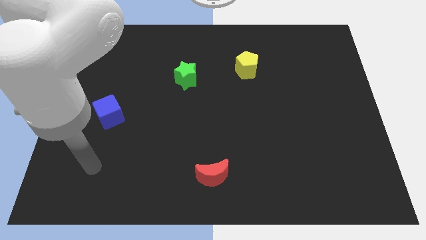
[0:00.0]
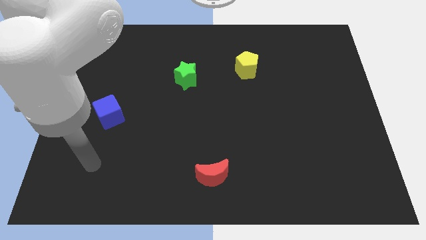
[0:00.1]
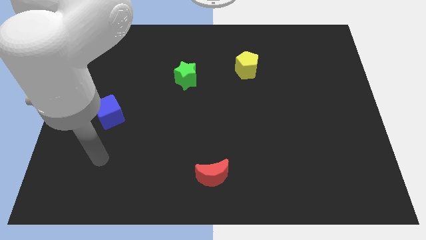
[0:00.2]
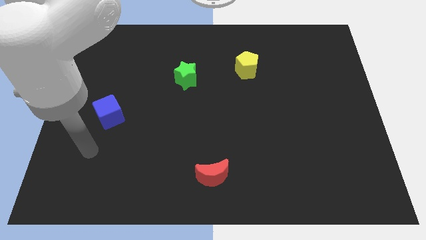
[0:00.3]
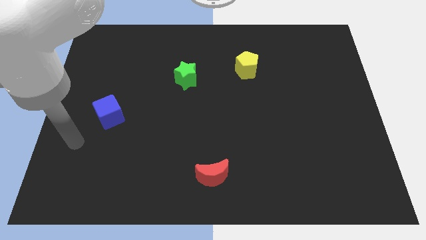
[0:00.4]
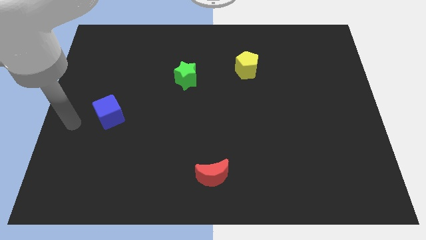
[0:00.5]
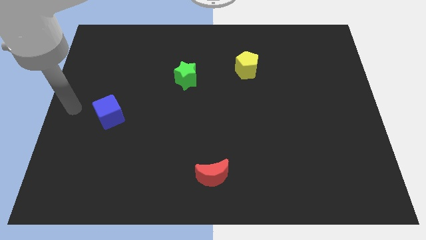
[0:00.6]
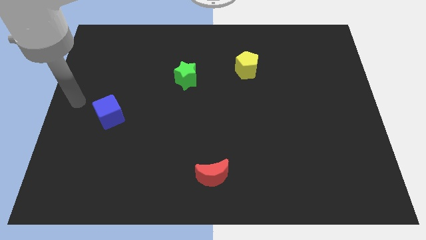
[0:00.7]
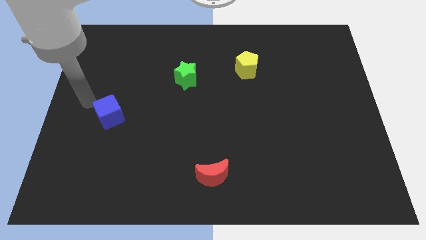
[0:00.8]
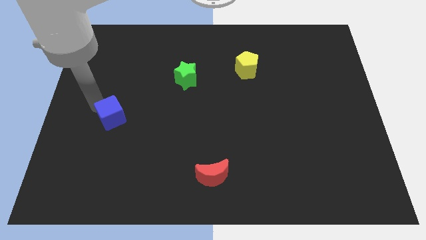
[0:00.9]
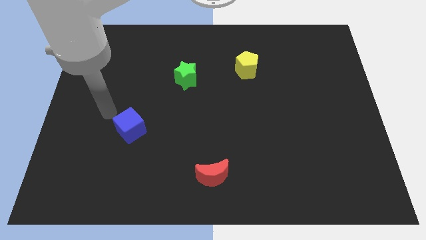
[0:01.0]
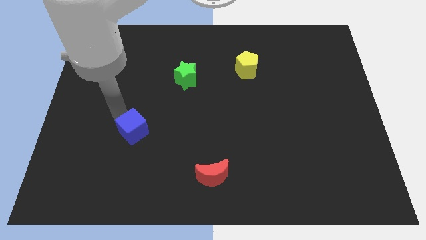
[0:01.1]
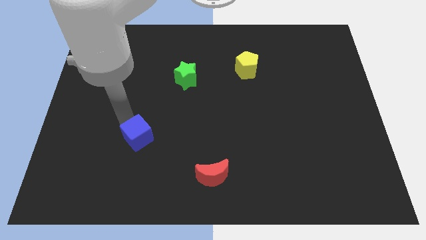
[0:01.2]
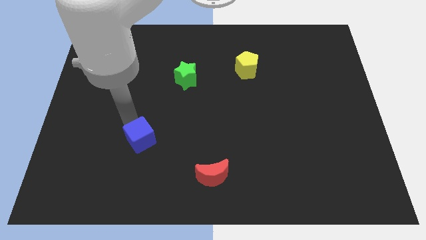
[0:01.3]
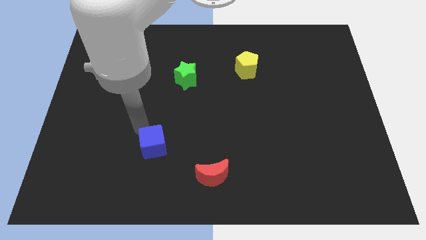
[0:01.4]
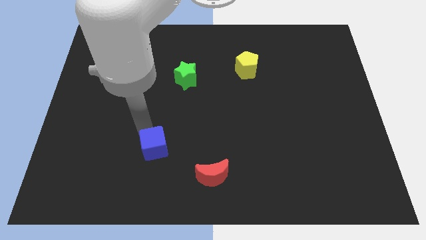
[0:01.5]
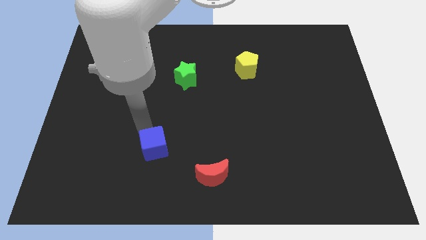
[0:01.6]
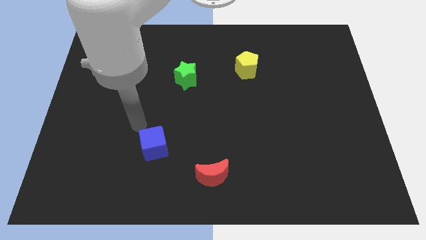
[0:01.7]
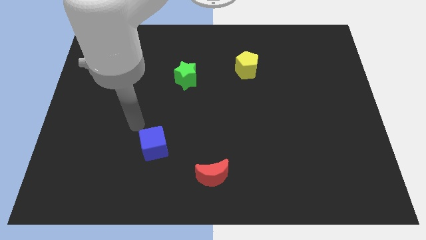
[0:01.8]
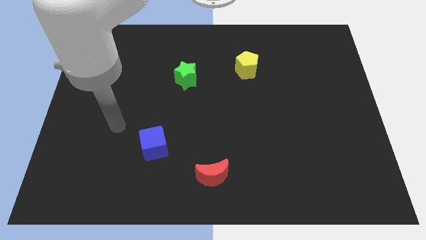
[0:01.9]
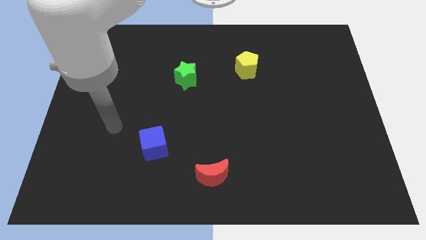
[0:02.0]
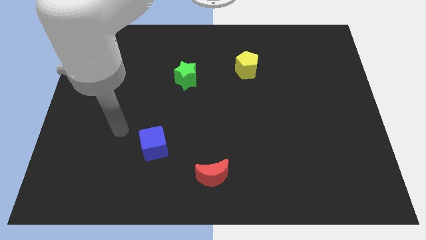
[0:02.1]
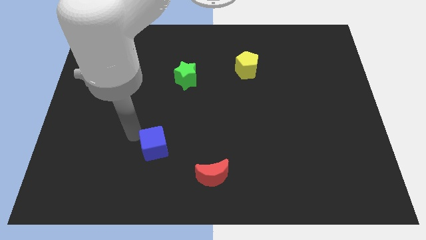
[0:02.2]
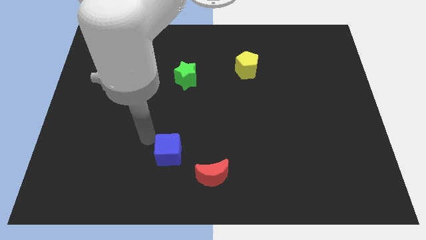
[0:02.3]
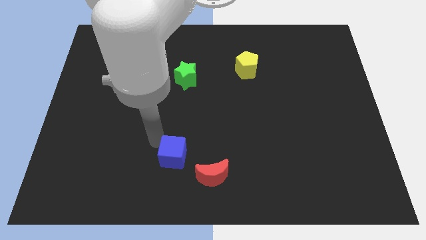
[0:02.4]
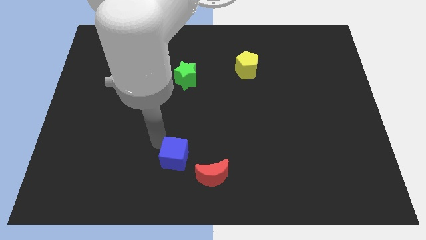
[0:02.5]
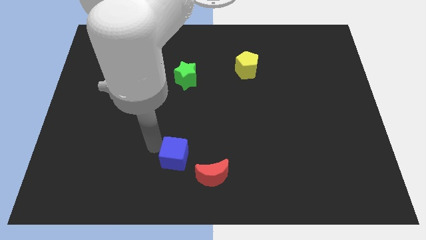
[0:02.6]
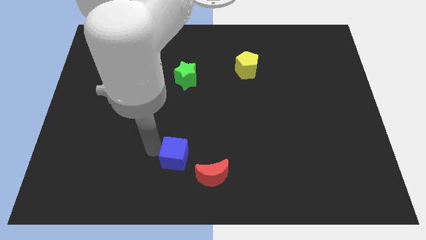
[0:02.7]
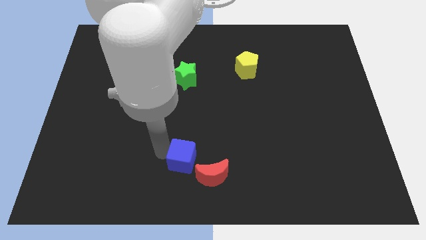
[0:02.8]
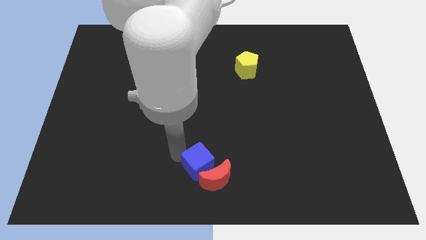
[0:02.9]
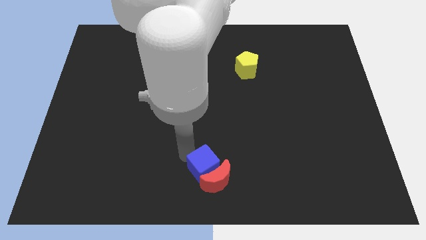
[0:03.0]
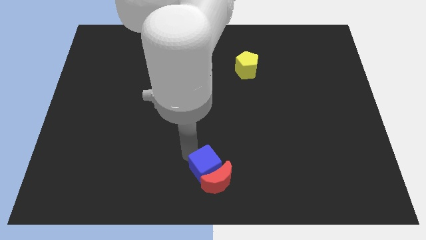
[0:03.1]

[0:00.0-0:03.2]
put the blue cube towards the red moon

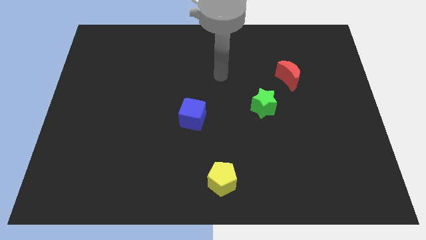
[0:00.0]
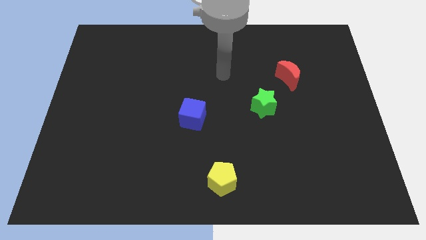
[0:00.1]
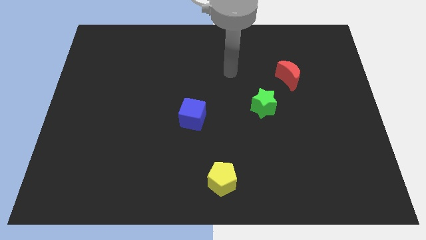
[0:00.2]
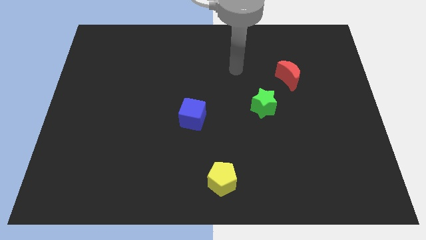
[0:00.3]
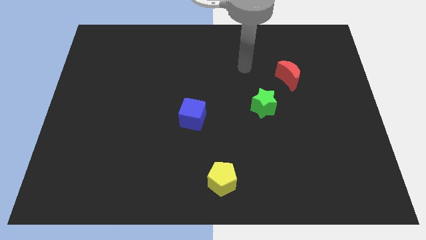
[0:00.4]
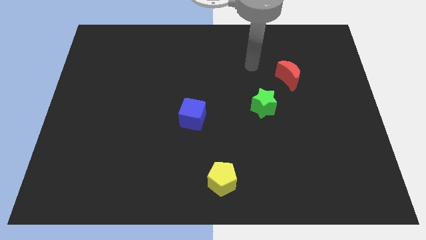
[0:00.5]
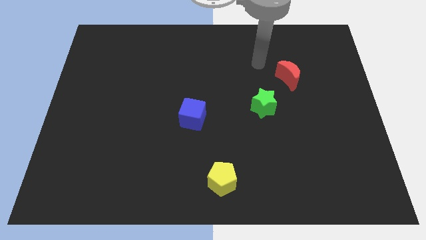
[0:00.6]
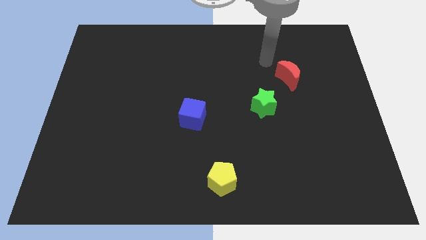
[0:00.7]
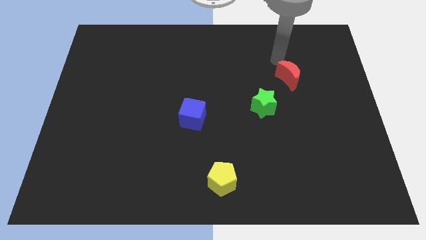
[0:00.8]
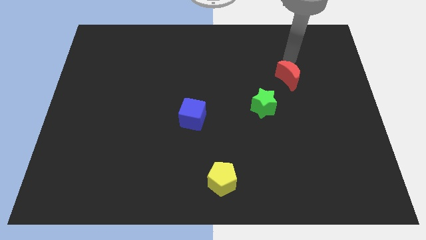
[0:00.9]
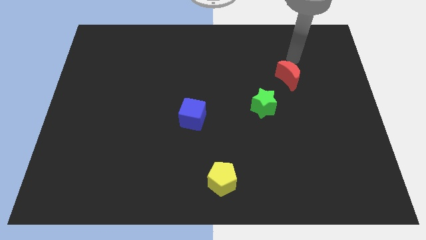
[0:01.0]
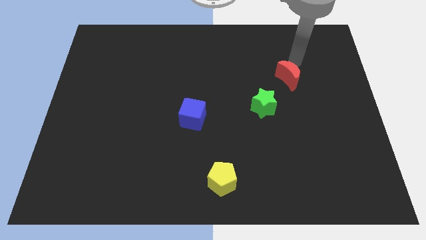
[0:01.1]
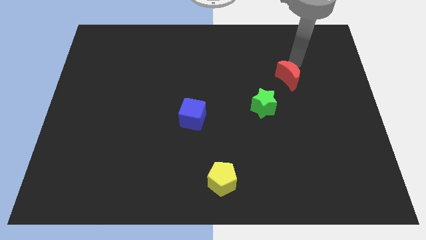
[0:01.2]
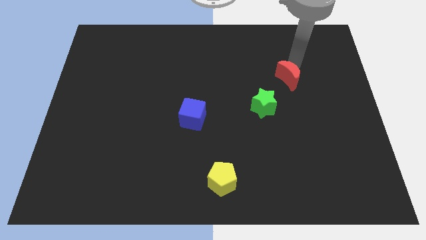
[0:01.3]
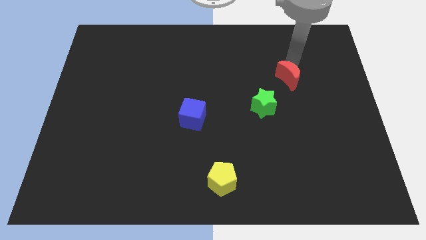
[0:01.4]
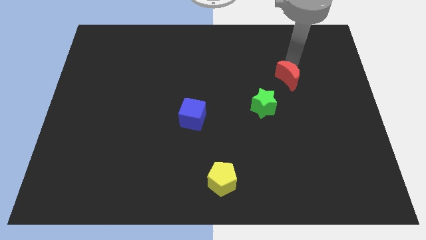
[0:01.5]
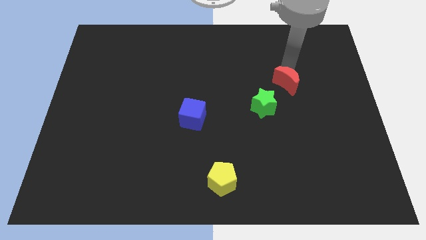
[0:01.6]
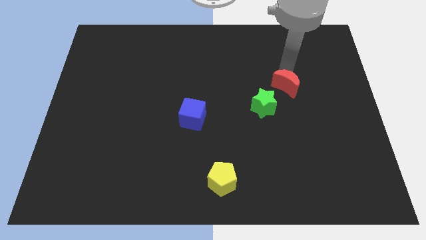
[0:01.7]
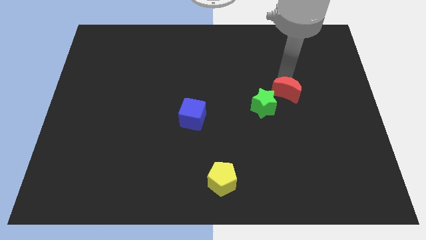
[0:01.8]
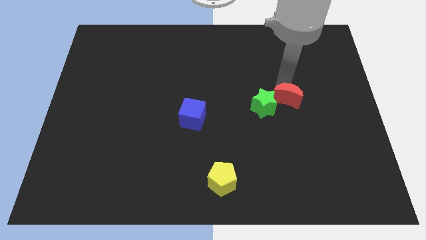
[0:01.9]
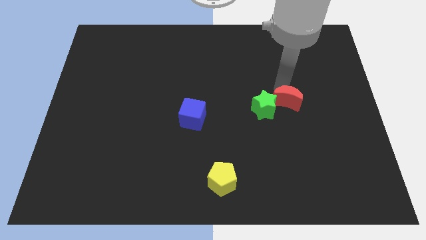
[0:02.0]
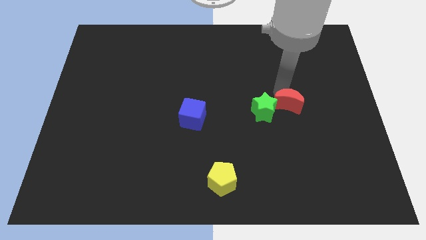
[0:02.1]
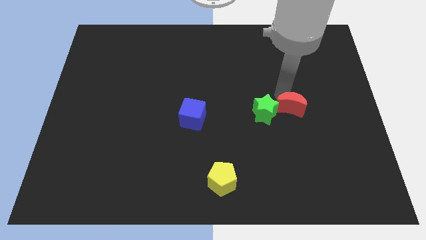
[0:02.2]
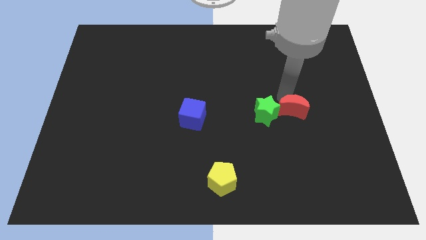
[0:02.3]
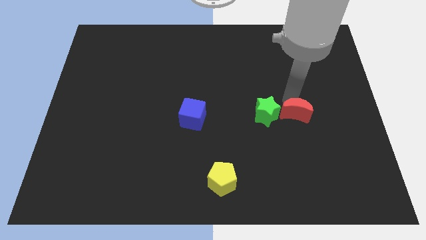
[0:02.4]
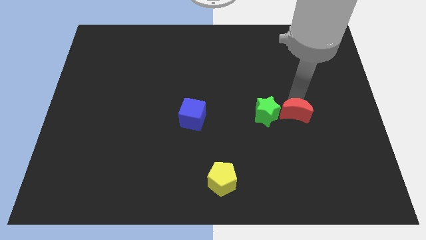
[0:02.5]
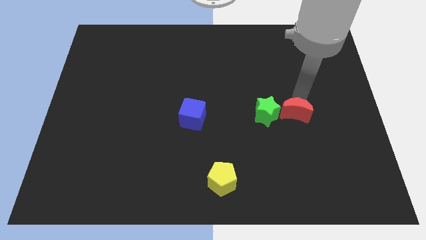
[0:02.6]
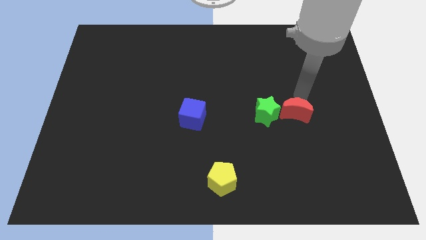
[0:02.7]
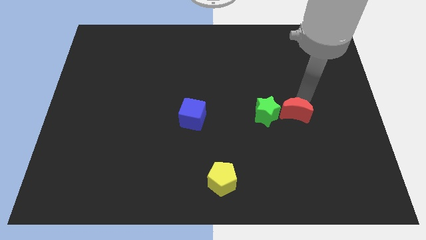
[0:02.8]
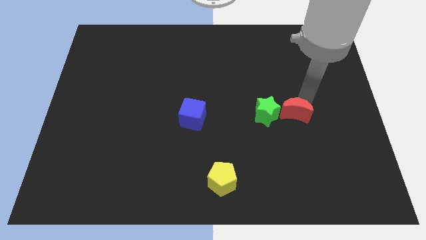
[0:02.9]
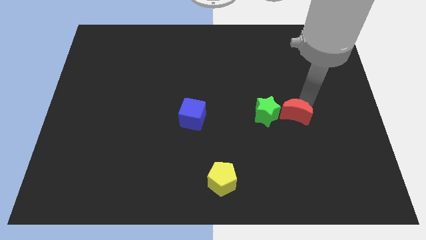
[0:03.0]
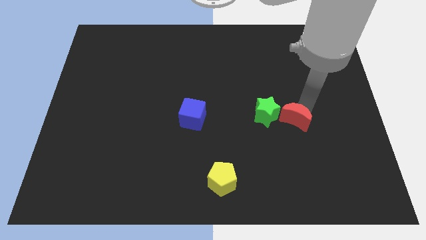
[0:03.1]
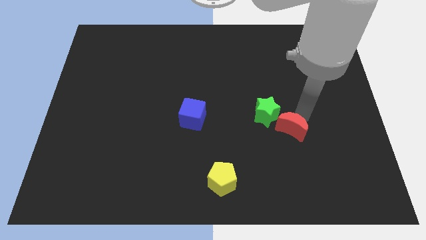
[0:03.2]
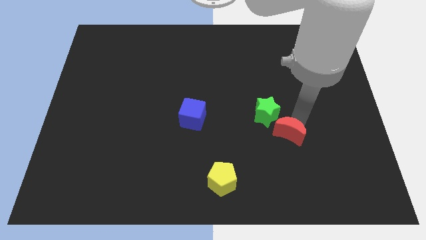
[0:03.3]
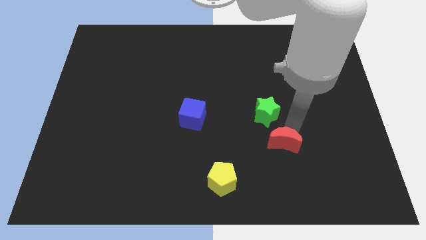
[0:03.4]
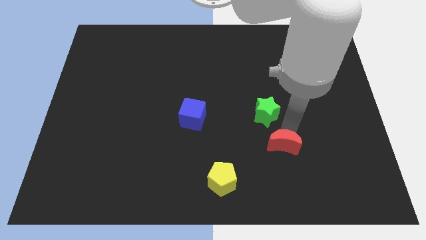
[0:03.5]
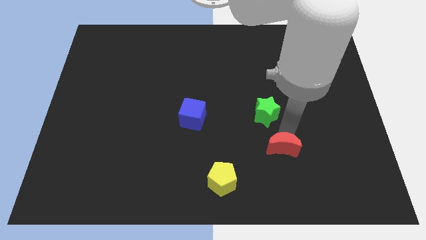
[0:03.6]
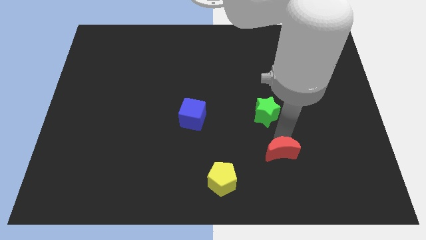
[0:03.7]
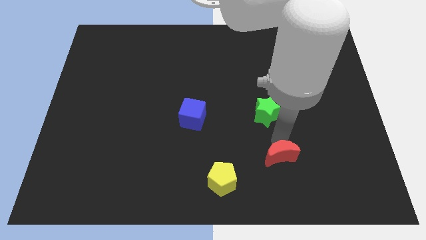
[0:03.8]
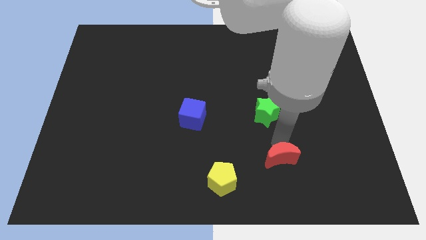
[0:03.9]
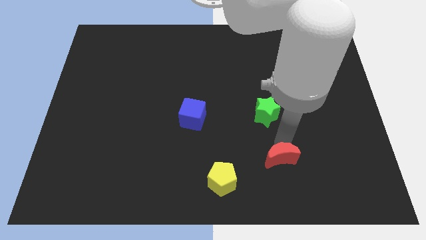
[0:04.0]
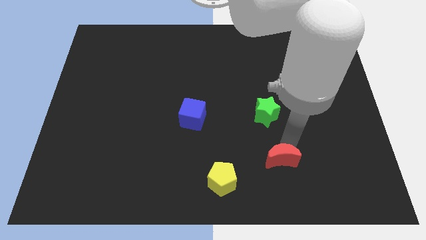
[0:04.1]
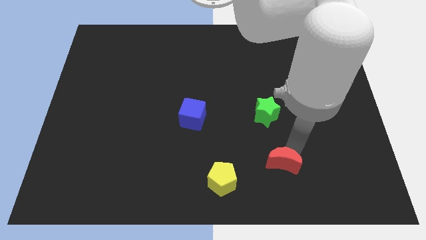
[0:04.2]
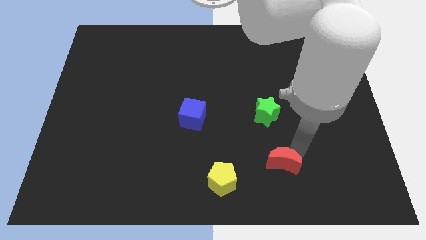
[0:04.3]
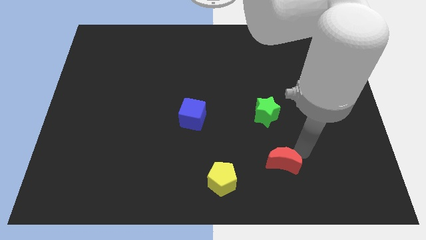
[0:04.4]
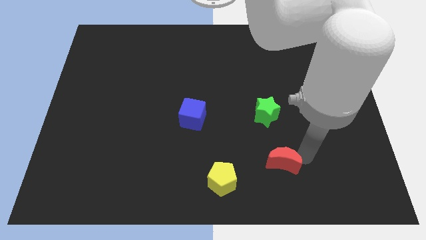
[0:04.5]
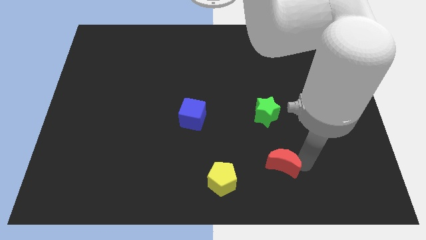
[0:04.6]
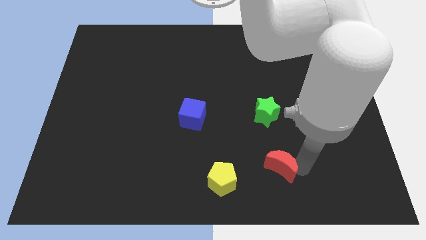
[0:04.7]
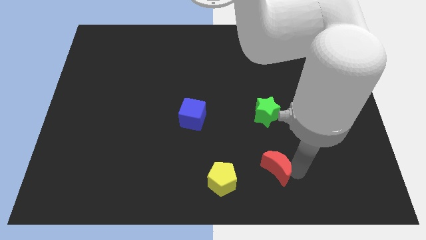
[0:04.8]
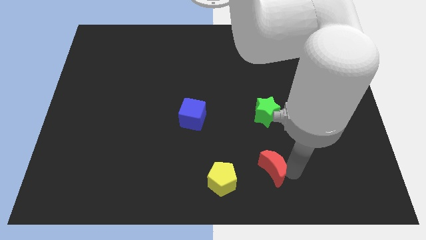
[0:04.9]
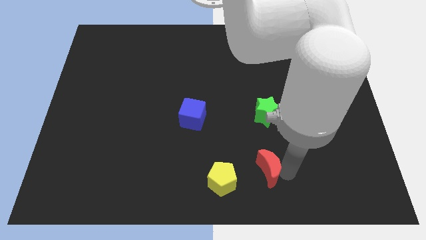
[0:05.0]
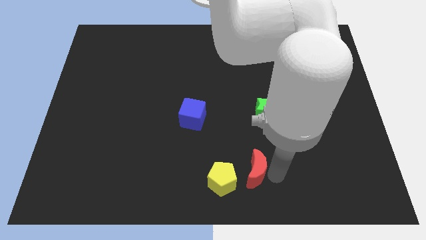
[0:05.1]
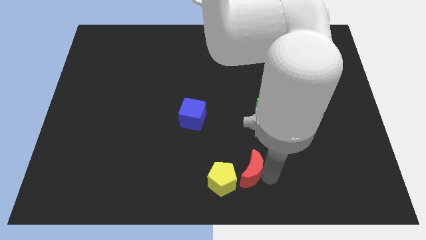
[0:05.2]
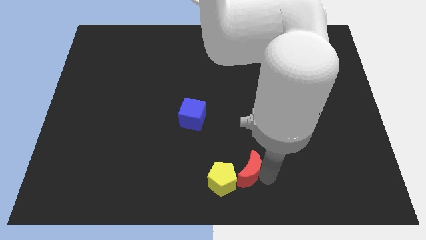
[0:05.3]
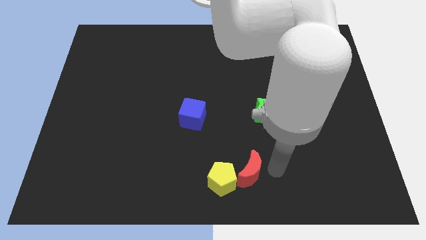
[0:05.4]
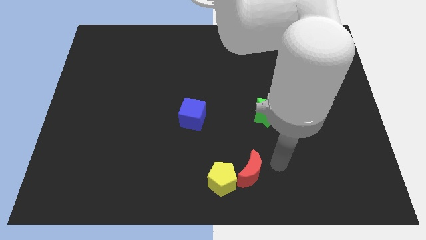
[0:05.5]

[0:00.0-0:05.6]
slide the red moon towards the yellow pentagon
